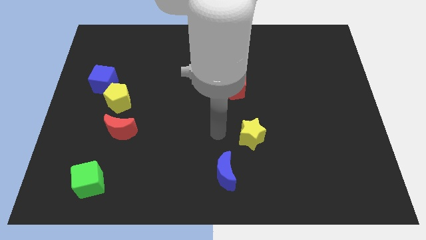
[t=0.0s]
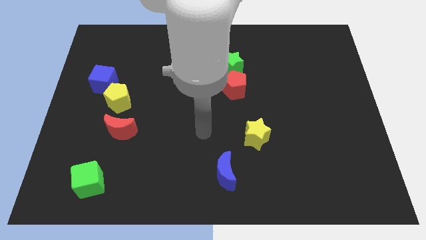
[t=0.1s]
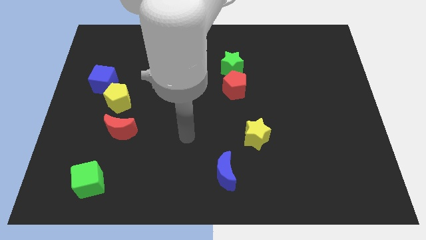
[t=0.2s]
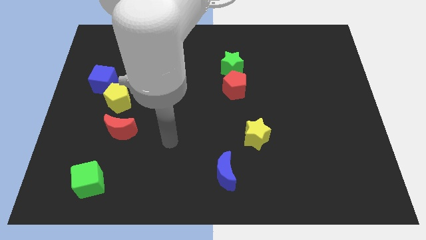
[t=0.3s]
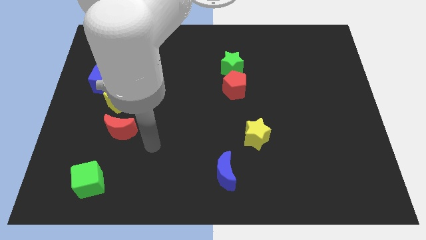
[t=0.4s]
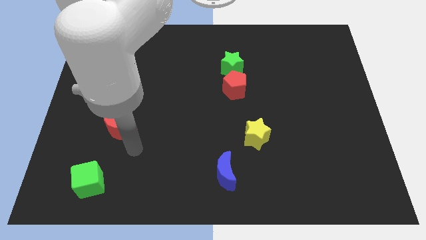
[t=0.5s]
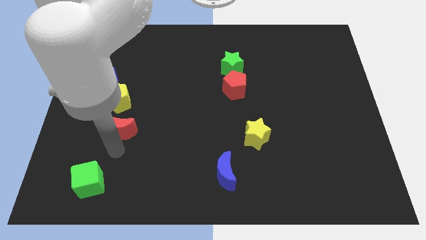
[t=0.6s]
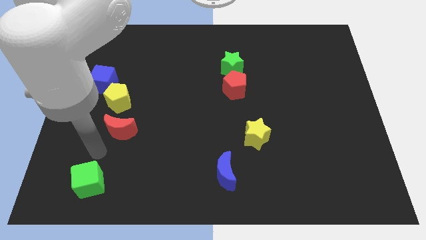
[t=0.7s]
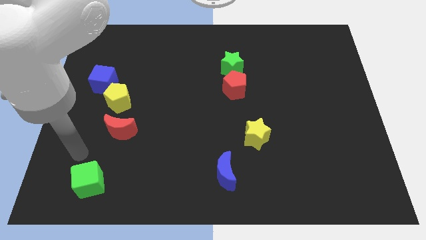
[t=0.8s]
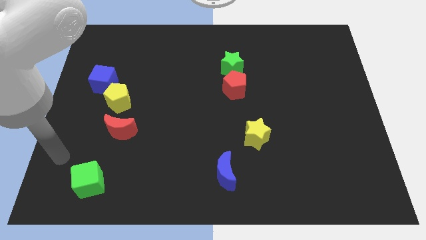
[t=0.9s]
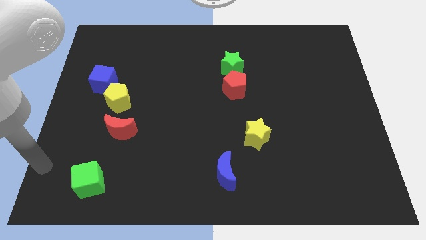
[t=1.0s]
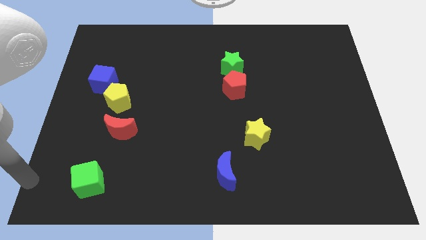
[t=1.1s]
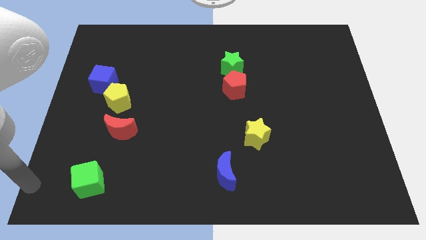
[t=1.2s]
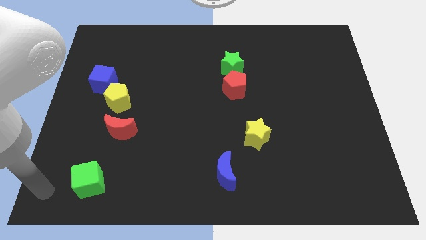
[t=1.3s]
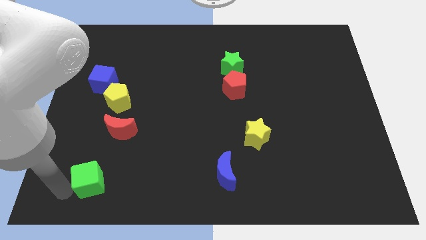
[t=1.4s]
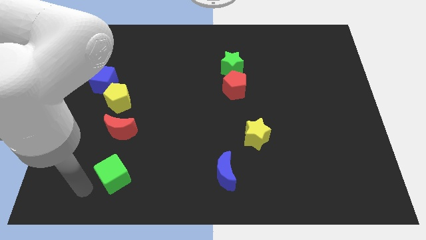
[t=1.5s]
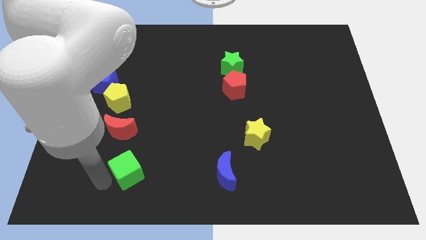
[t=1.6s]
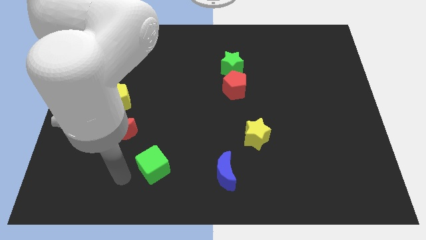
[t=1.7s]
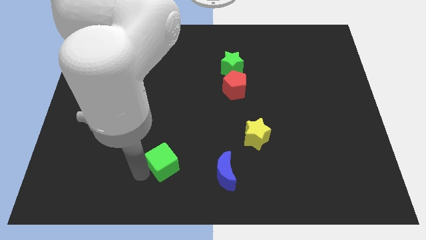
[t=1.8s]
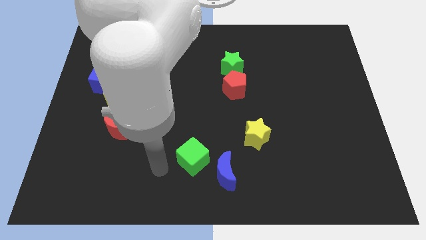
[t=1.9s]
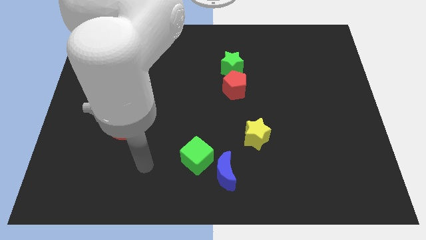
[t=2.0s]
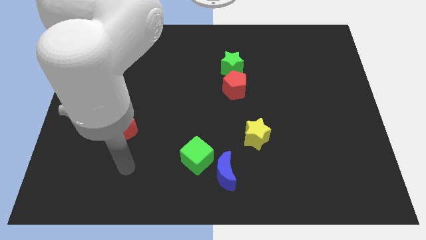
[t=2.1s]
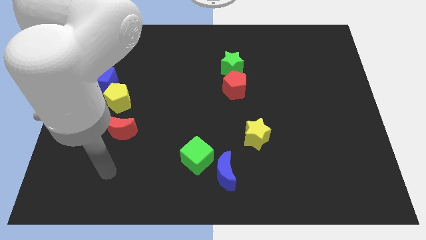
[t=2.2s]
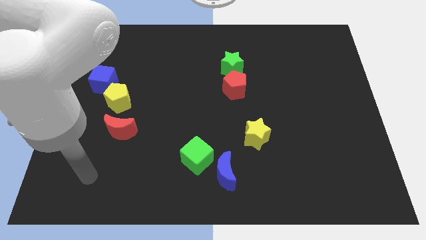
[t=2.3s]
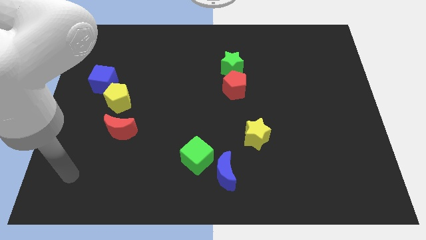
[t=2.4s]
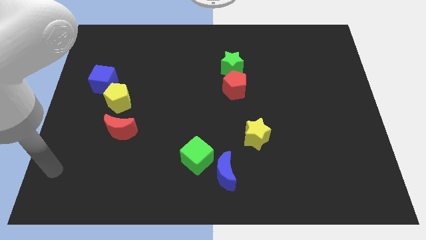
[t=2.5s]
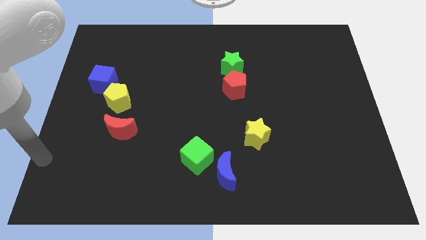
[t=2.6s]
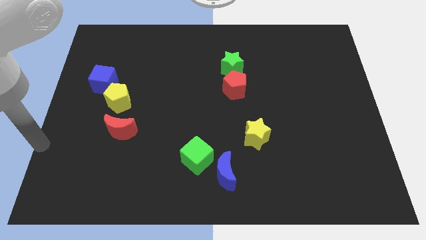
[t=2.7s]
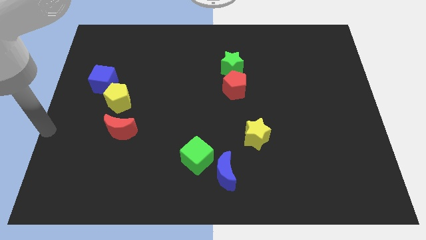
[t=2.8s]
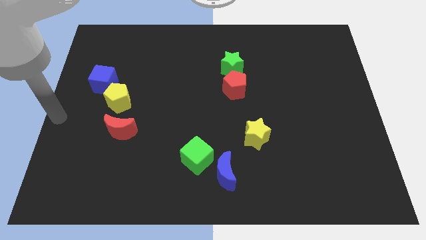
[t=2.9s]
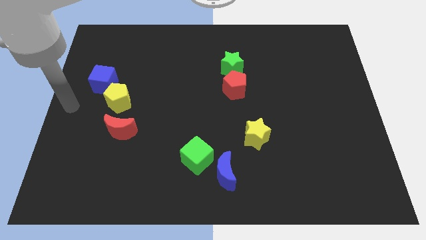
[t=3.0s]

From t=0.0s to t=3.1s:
place the green cube in between the blue moon and red pentagon

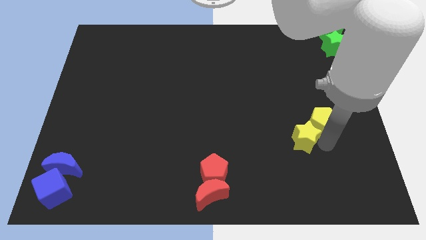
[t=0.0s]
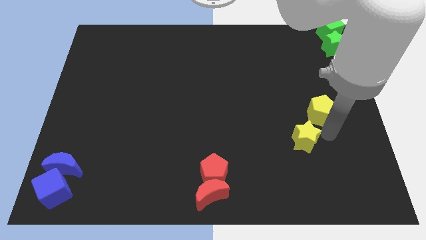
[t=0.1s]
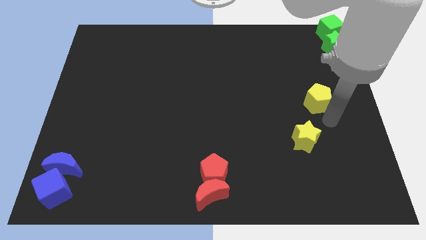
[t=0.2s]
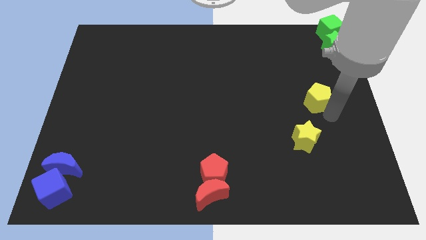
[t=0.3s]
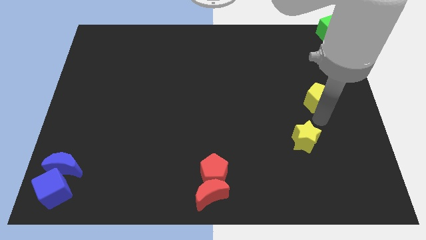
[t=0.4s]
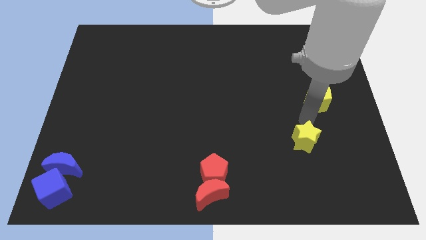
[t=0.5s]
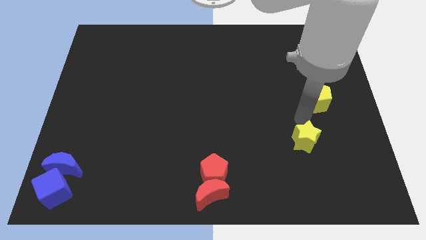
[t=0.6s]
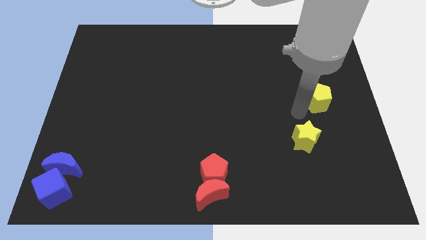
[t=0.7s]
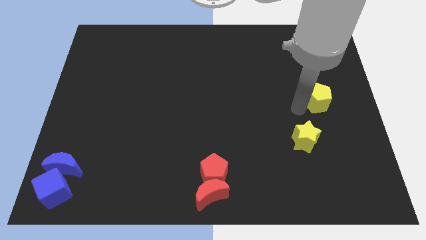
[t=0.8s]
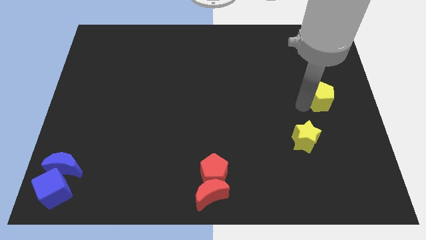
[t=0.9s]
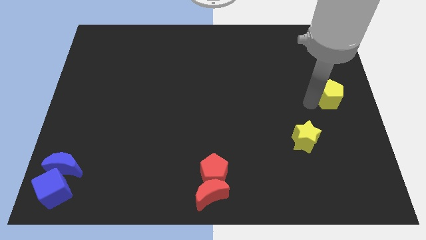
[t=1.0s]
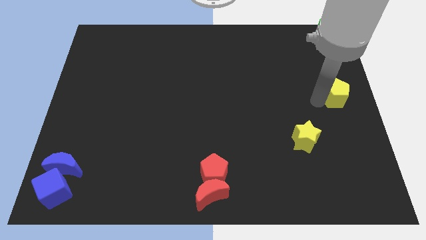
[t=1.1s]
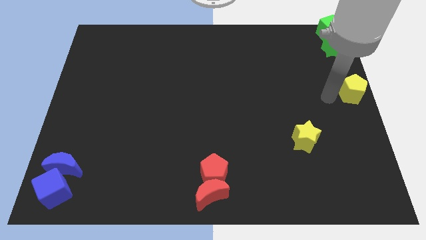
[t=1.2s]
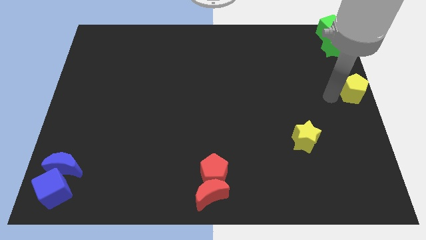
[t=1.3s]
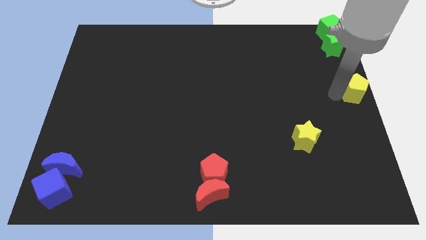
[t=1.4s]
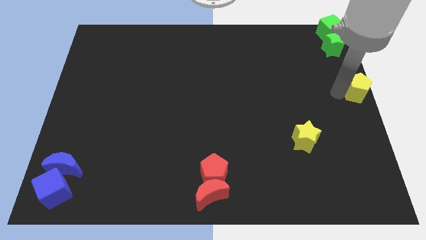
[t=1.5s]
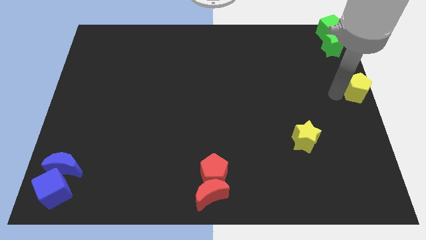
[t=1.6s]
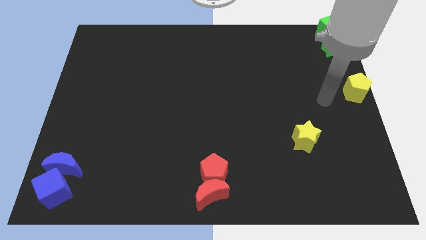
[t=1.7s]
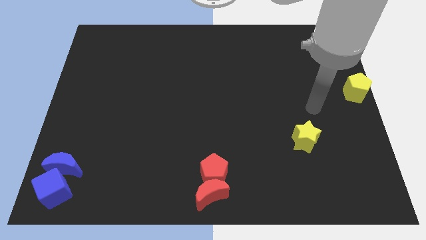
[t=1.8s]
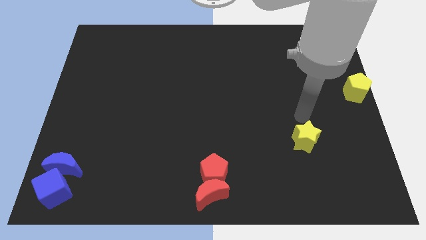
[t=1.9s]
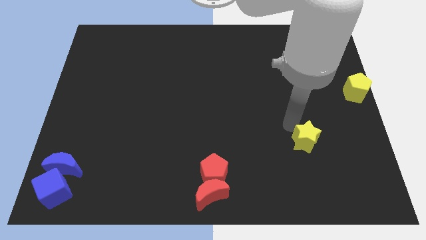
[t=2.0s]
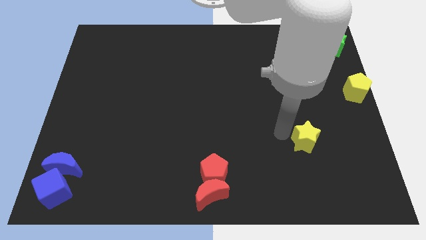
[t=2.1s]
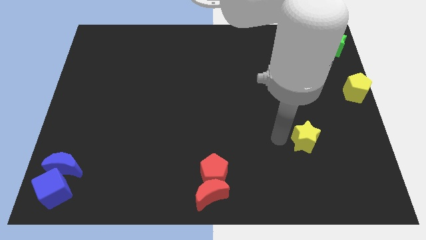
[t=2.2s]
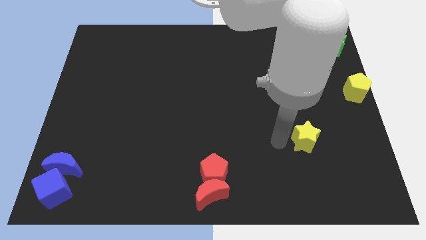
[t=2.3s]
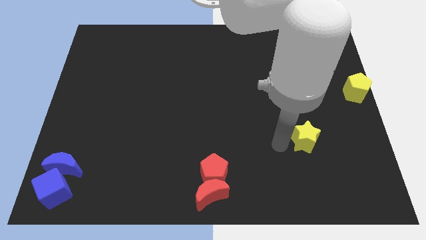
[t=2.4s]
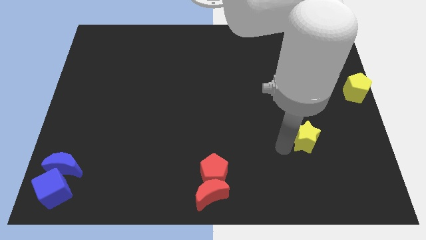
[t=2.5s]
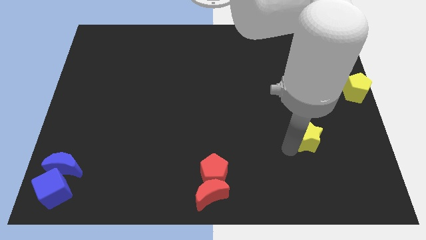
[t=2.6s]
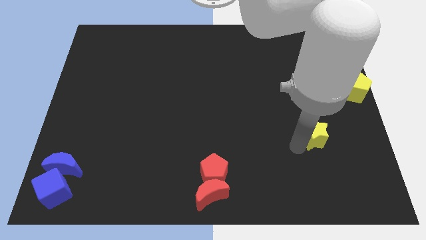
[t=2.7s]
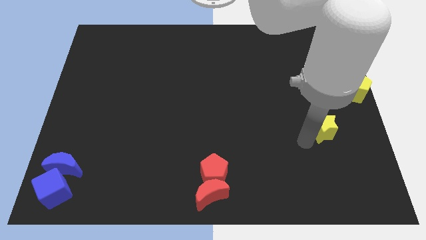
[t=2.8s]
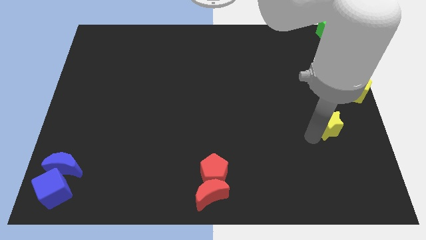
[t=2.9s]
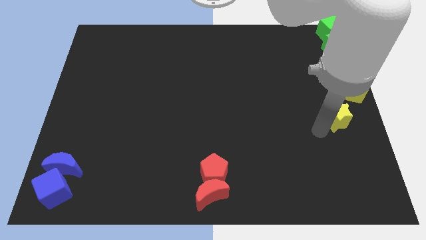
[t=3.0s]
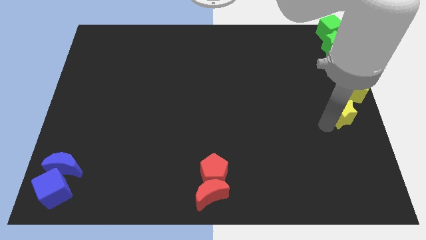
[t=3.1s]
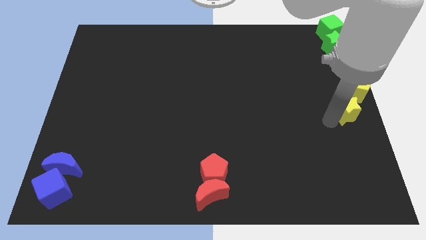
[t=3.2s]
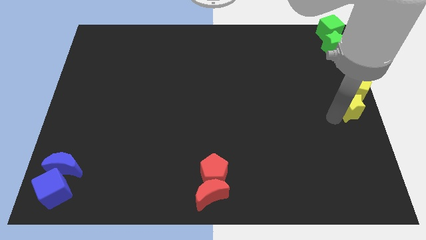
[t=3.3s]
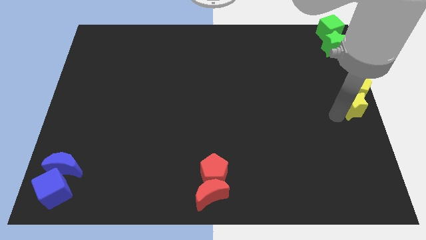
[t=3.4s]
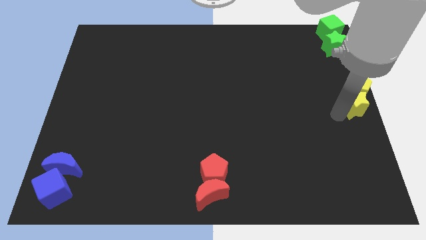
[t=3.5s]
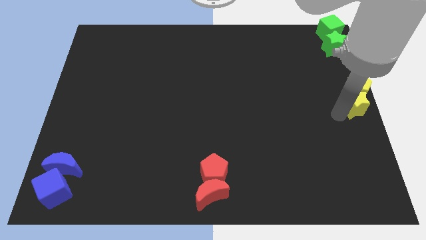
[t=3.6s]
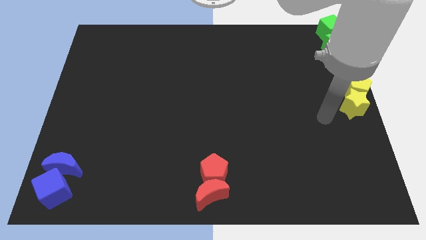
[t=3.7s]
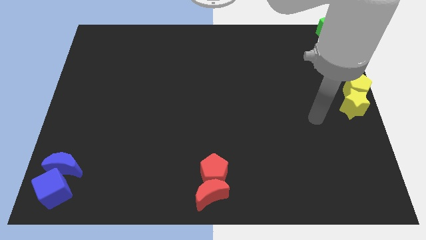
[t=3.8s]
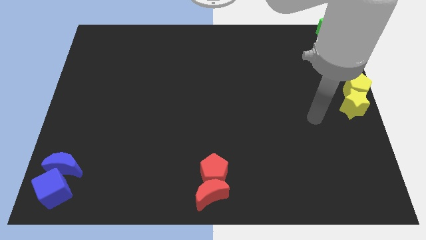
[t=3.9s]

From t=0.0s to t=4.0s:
move the group of yellow blocks at the center right of the board

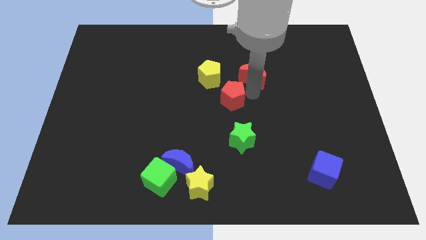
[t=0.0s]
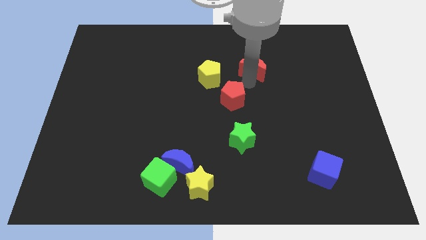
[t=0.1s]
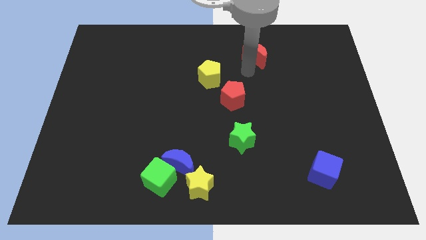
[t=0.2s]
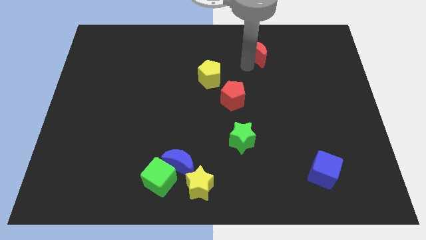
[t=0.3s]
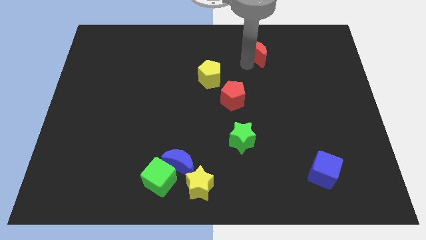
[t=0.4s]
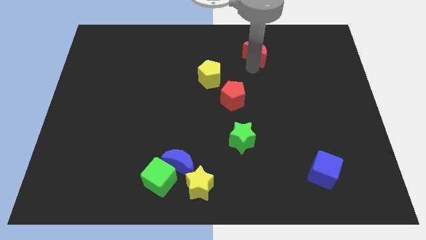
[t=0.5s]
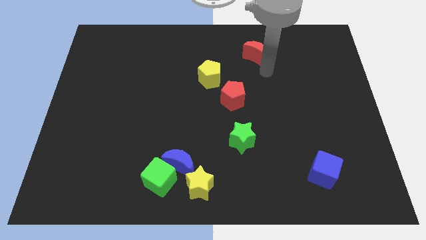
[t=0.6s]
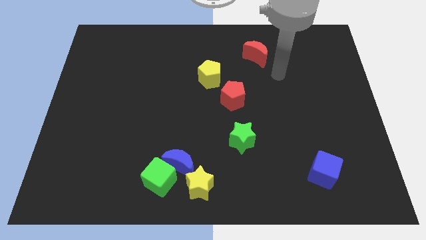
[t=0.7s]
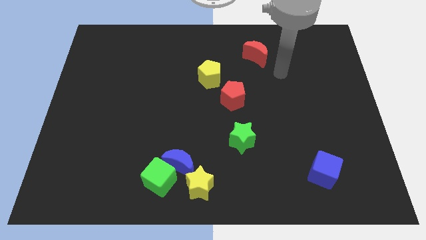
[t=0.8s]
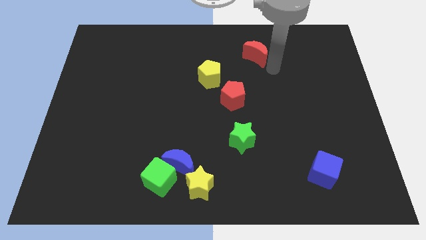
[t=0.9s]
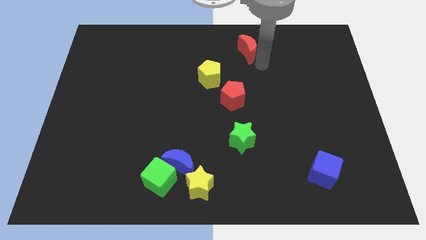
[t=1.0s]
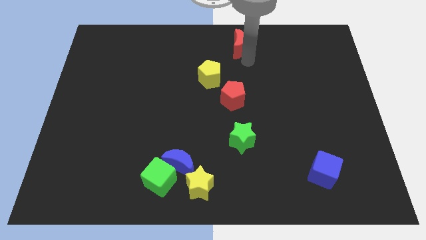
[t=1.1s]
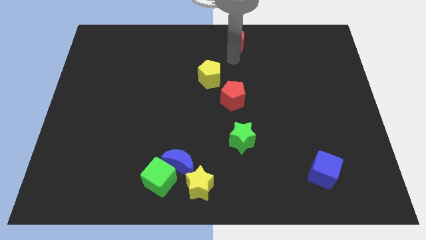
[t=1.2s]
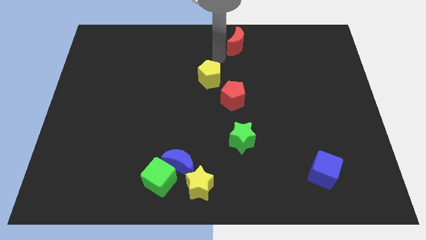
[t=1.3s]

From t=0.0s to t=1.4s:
push the red crescent to the top right of the yellow pentagon

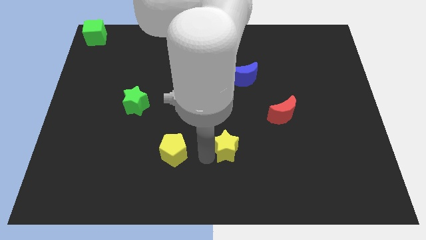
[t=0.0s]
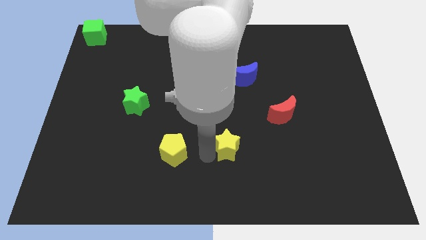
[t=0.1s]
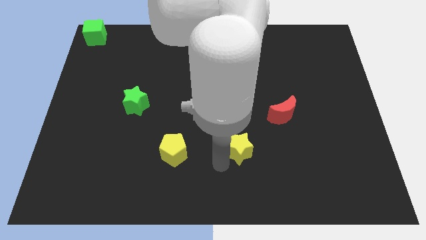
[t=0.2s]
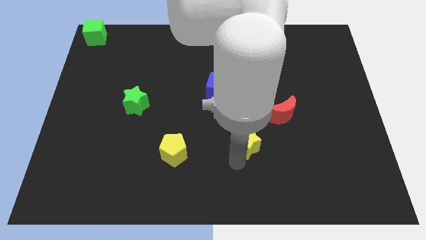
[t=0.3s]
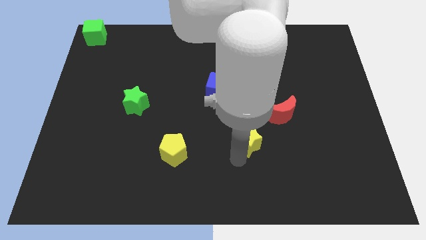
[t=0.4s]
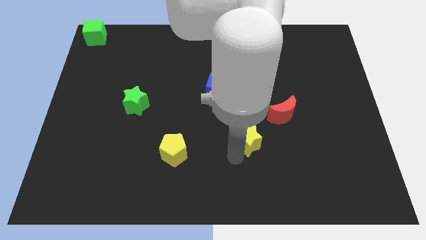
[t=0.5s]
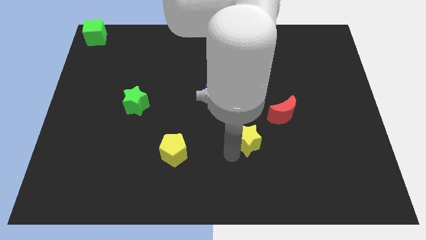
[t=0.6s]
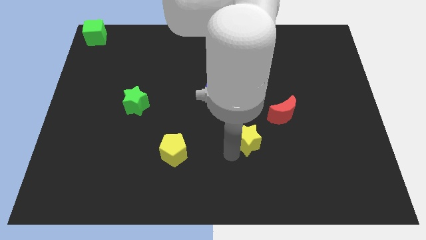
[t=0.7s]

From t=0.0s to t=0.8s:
put the yellow star diagonally to left of the red moon
